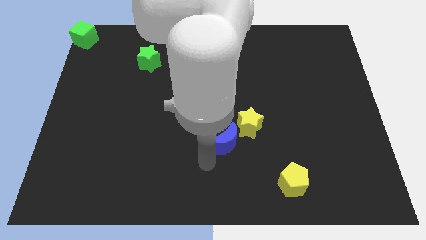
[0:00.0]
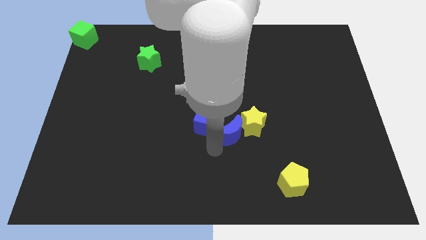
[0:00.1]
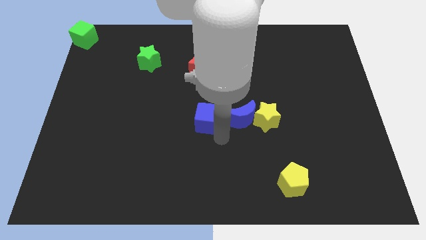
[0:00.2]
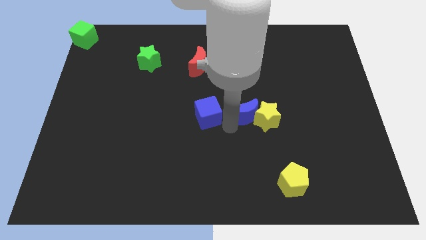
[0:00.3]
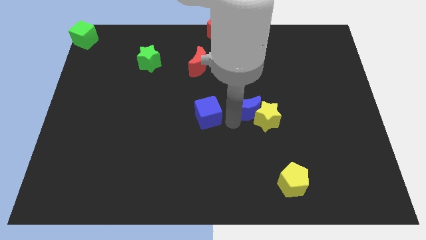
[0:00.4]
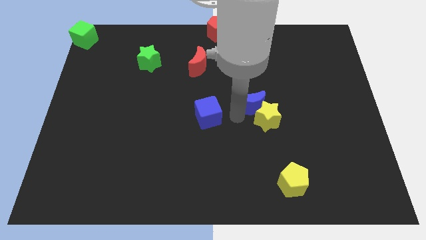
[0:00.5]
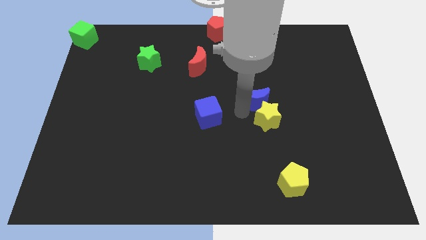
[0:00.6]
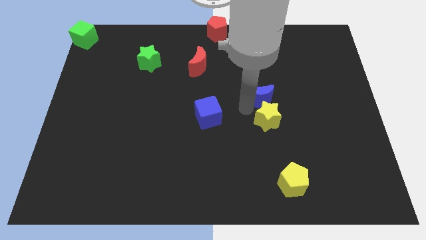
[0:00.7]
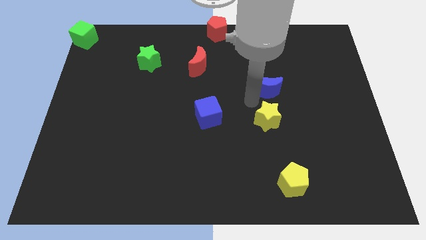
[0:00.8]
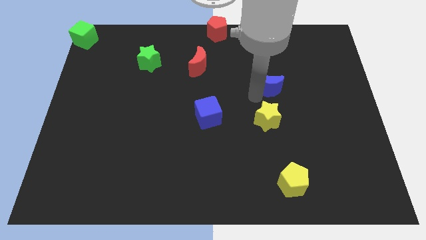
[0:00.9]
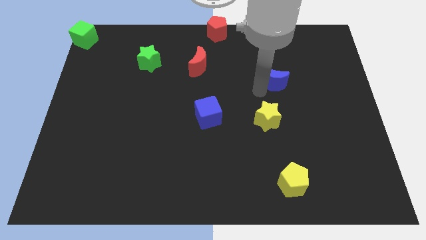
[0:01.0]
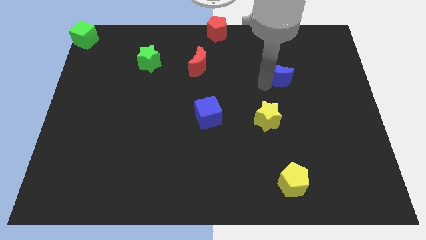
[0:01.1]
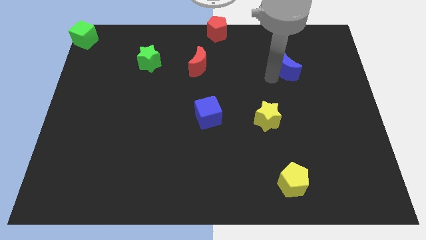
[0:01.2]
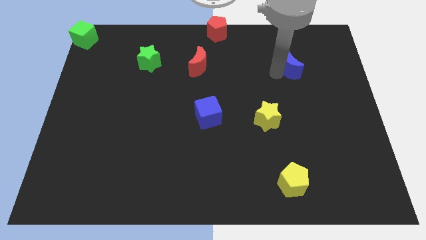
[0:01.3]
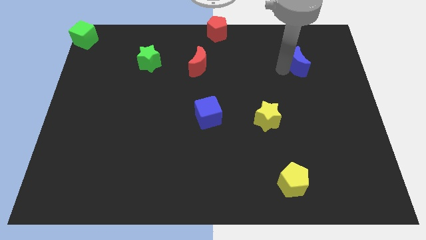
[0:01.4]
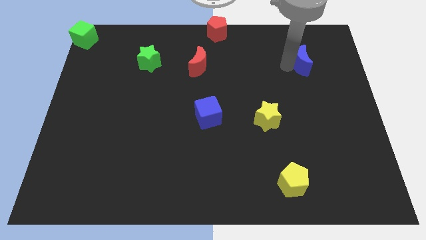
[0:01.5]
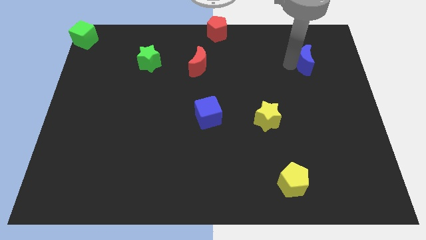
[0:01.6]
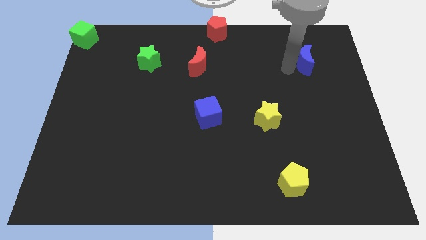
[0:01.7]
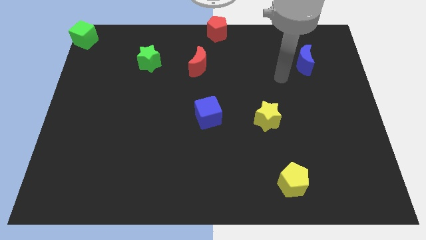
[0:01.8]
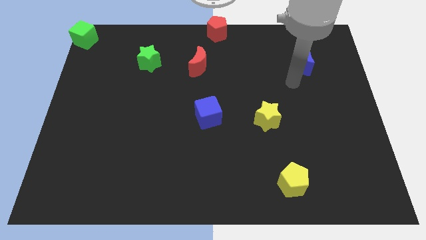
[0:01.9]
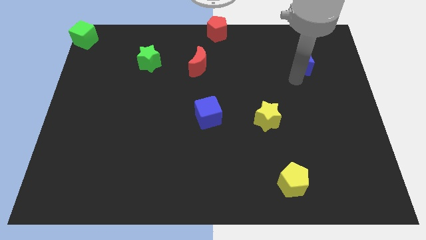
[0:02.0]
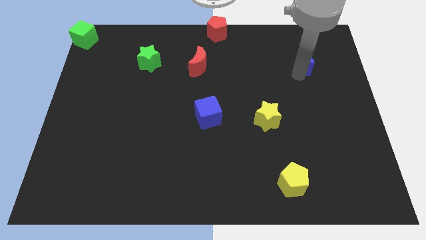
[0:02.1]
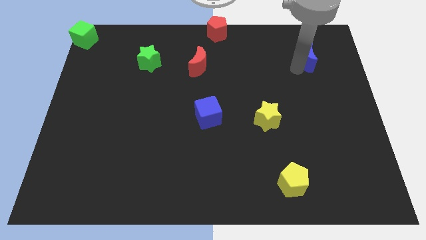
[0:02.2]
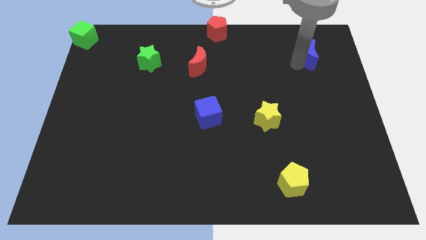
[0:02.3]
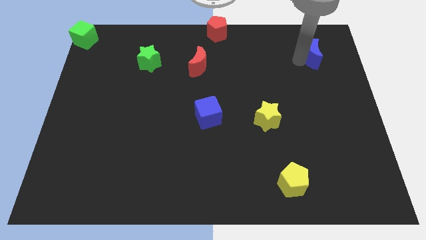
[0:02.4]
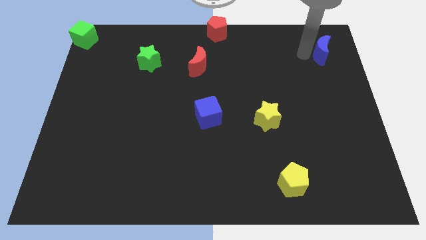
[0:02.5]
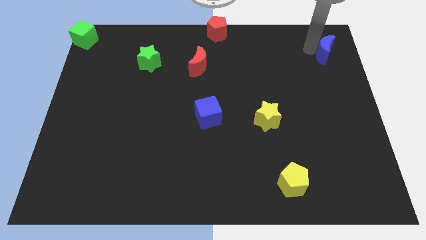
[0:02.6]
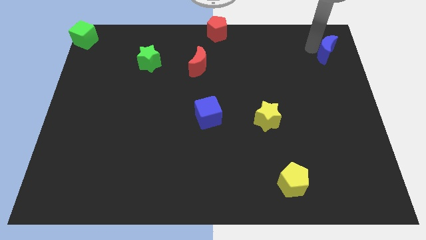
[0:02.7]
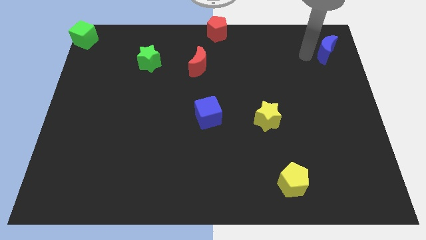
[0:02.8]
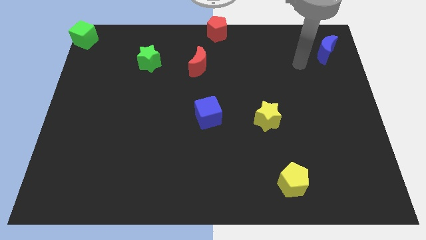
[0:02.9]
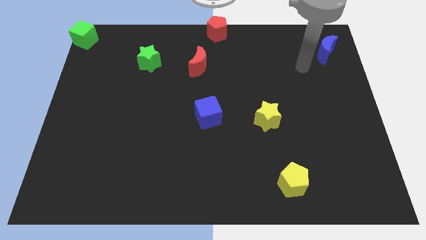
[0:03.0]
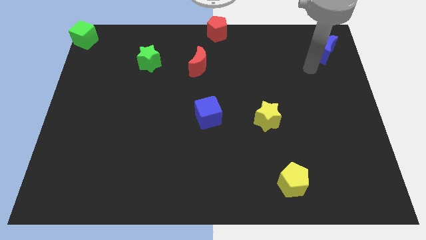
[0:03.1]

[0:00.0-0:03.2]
move blue crescent towards top right

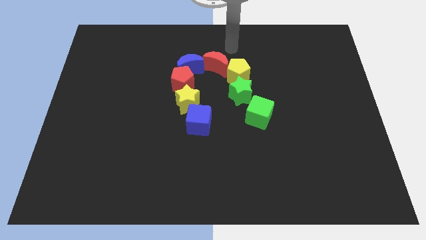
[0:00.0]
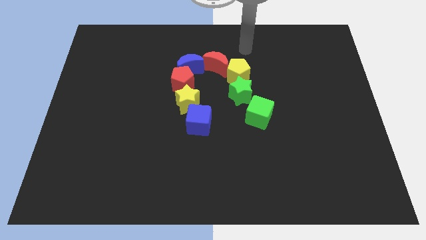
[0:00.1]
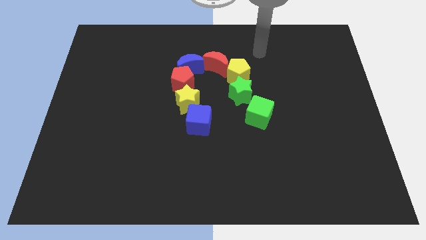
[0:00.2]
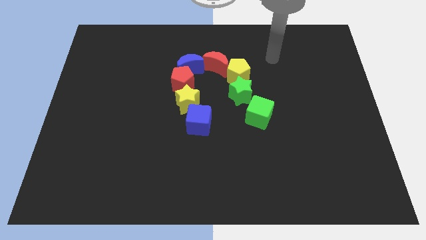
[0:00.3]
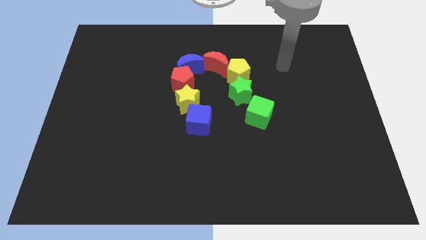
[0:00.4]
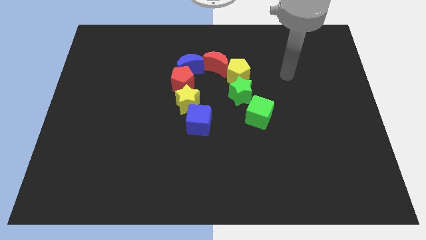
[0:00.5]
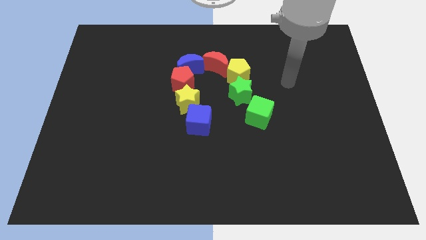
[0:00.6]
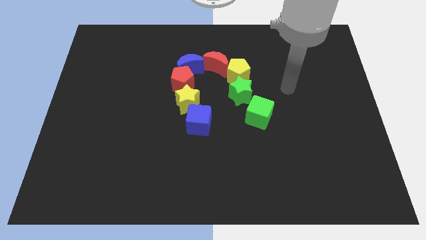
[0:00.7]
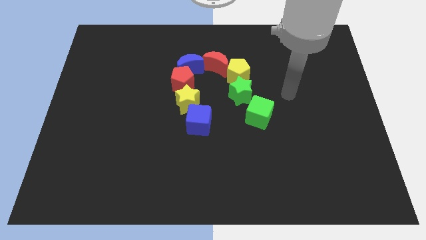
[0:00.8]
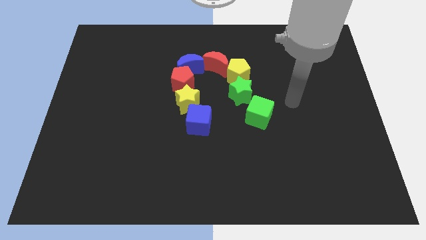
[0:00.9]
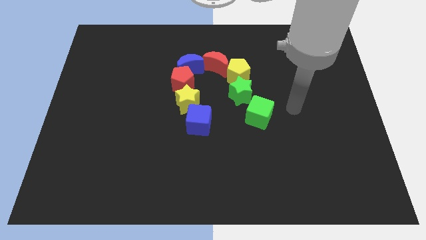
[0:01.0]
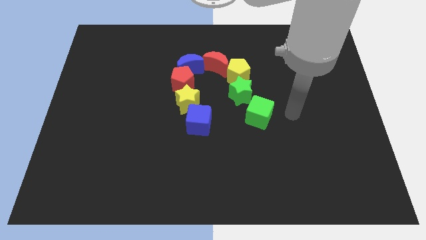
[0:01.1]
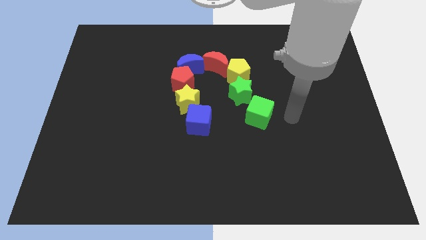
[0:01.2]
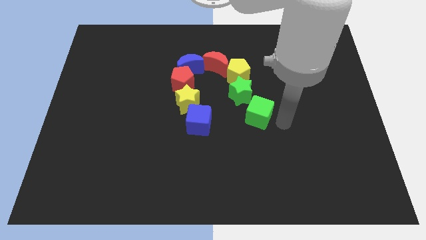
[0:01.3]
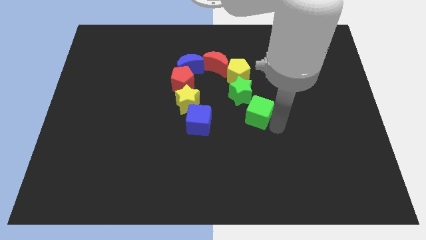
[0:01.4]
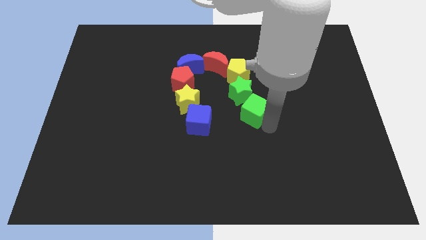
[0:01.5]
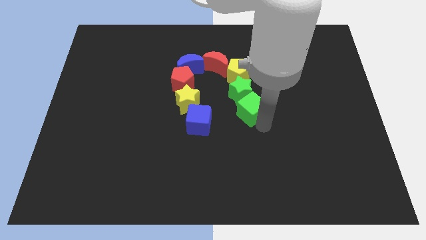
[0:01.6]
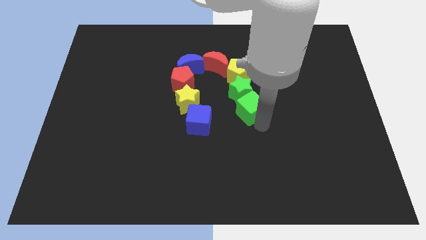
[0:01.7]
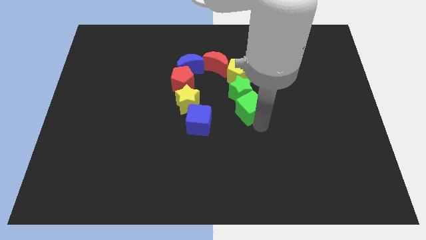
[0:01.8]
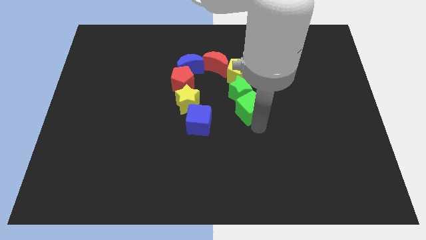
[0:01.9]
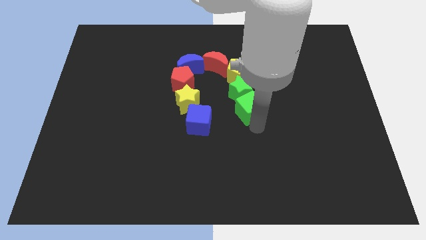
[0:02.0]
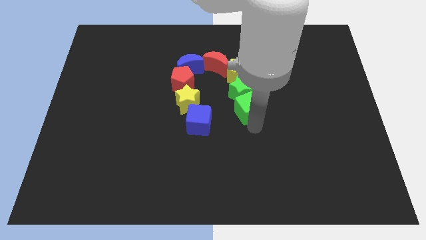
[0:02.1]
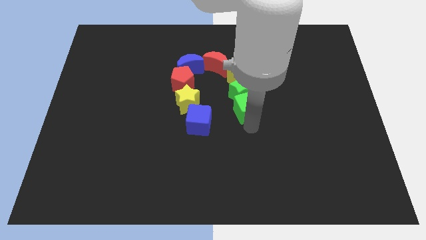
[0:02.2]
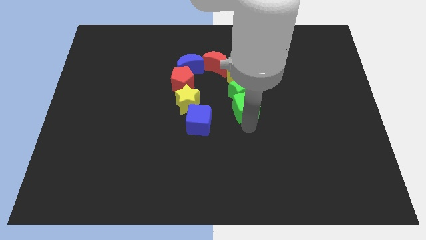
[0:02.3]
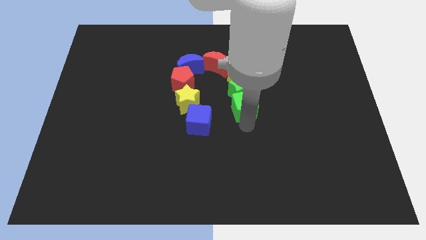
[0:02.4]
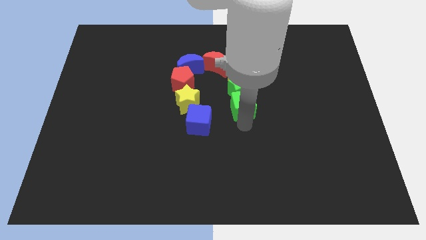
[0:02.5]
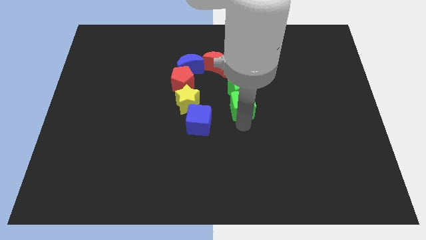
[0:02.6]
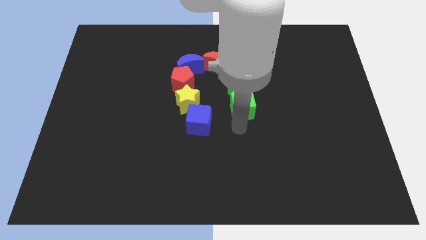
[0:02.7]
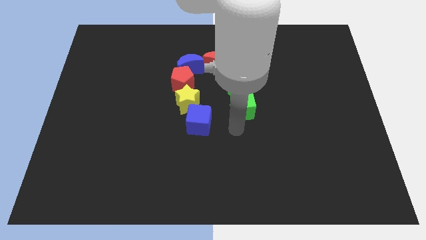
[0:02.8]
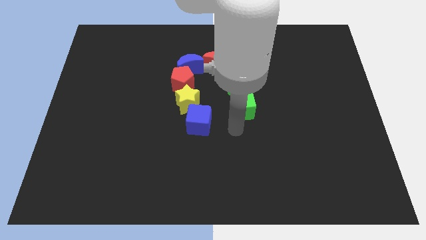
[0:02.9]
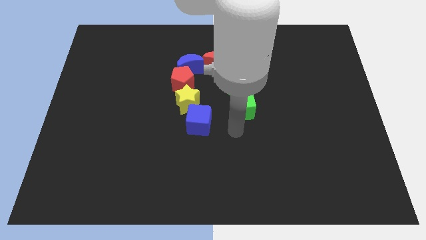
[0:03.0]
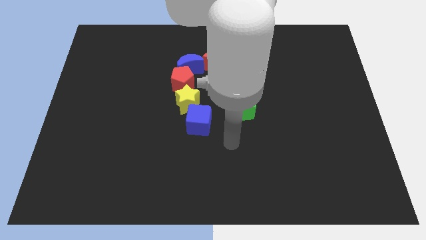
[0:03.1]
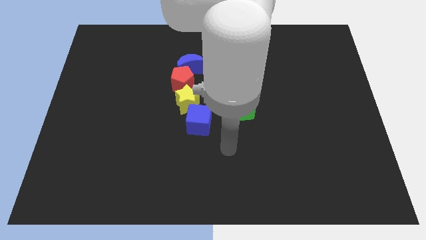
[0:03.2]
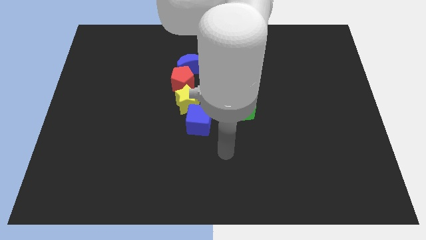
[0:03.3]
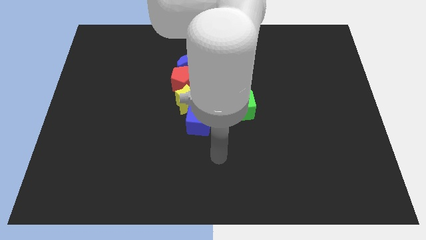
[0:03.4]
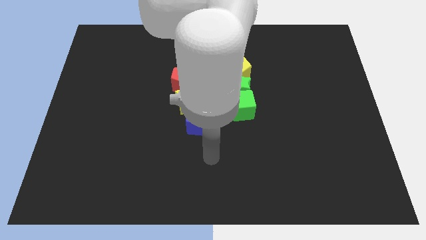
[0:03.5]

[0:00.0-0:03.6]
push the green cube into green star

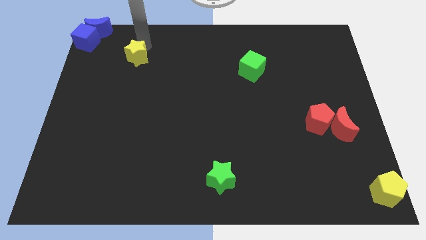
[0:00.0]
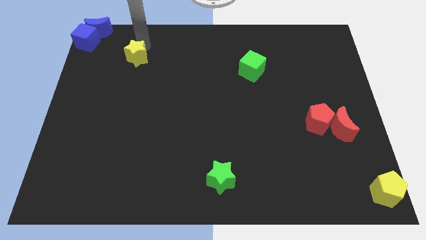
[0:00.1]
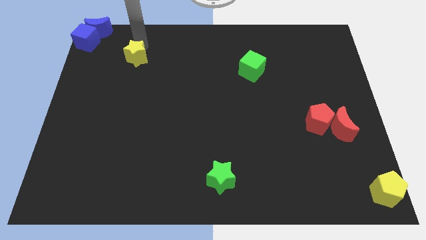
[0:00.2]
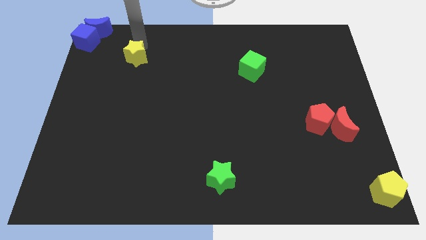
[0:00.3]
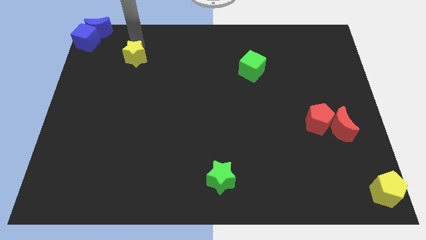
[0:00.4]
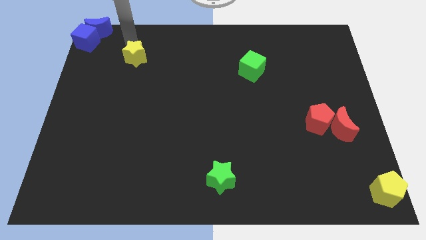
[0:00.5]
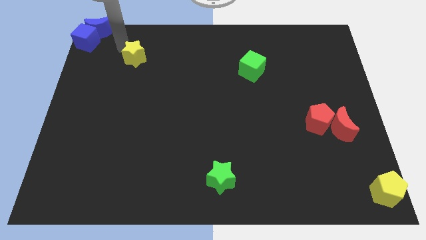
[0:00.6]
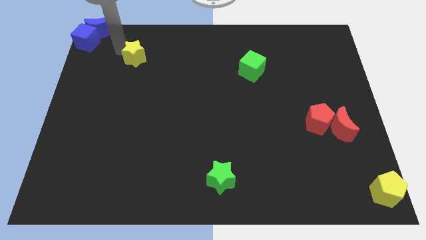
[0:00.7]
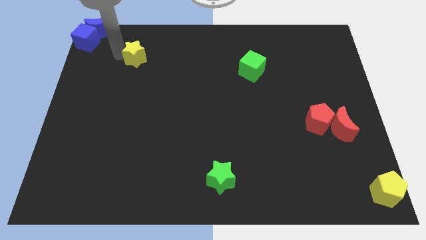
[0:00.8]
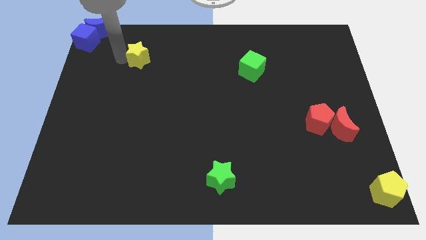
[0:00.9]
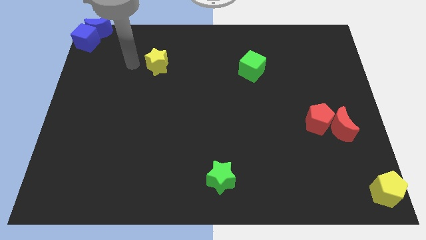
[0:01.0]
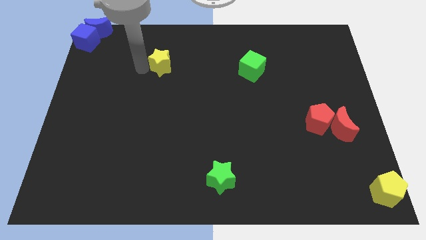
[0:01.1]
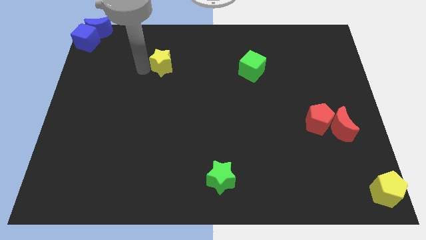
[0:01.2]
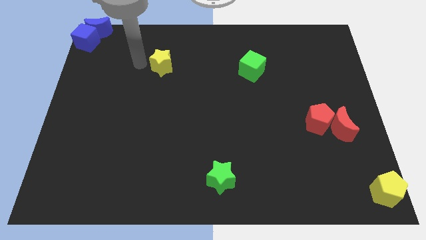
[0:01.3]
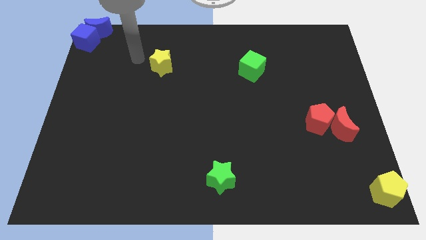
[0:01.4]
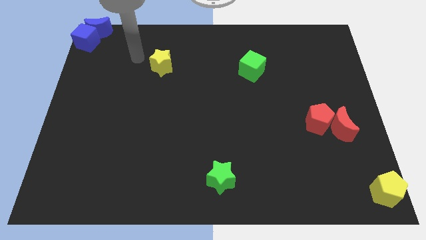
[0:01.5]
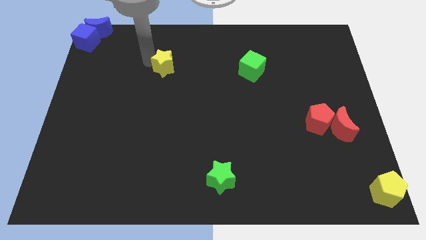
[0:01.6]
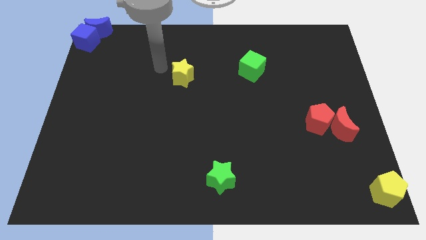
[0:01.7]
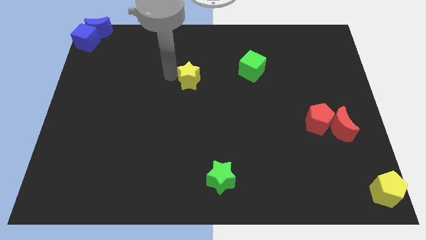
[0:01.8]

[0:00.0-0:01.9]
move the yellow star horizontally left of the green cube

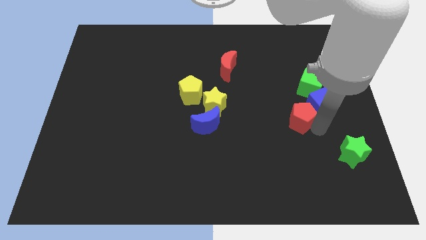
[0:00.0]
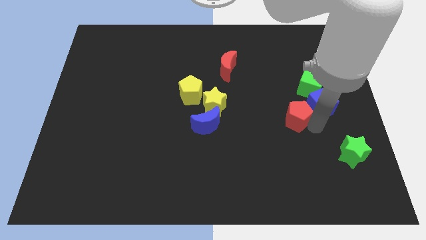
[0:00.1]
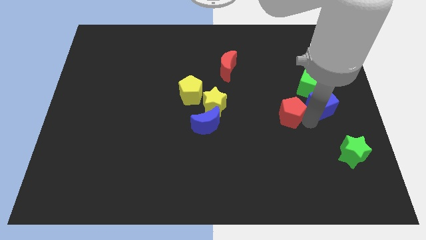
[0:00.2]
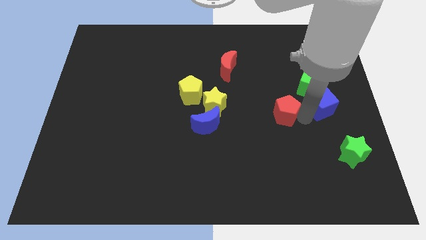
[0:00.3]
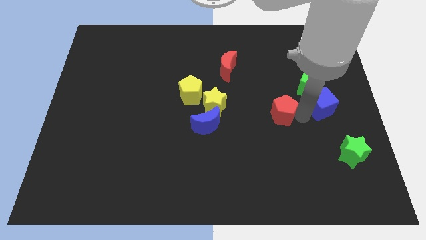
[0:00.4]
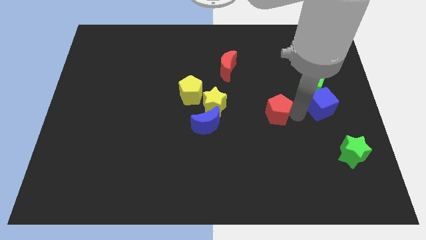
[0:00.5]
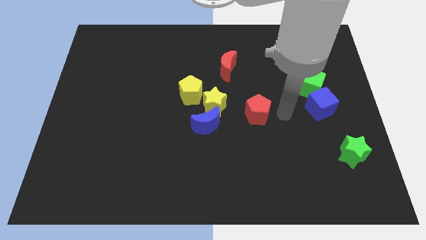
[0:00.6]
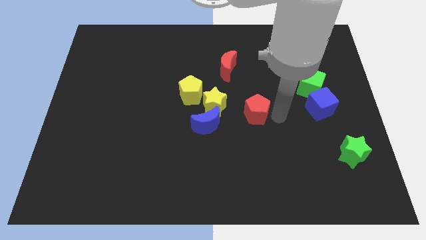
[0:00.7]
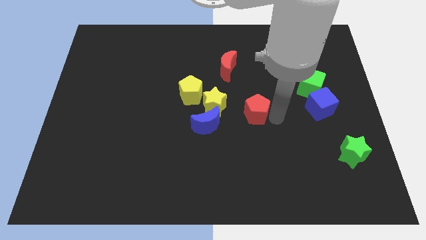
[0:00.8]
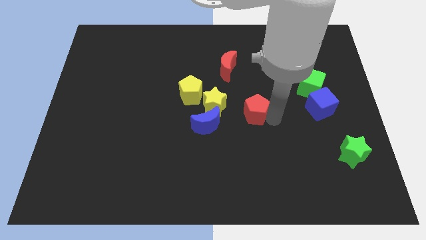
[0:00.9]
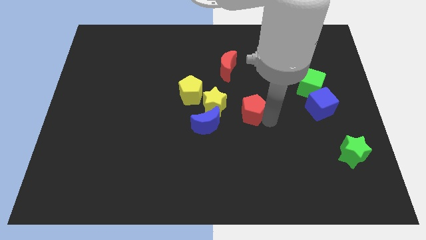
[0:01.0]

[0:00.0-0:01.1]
push red pentagon towards center
